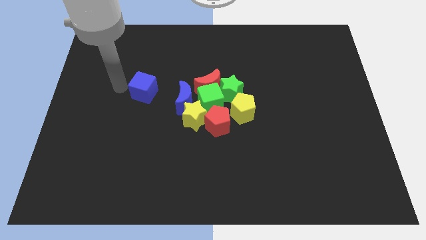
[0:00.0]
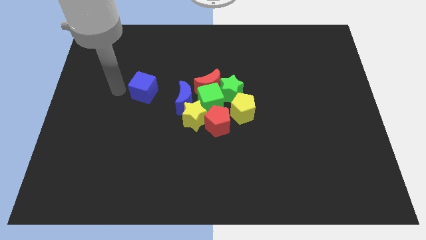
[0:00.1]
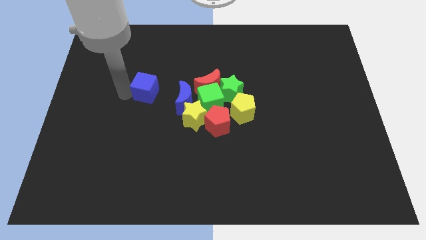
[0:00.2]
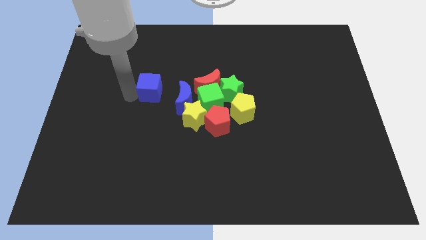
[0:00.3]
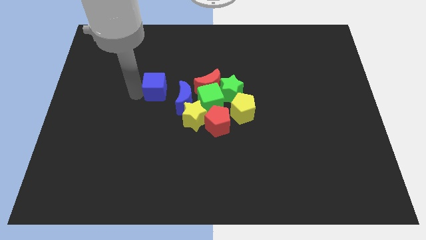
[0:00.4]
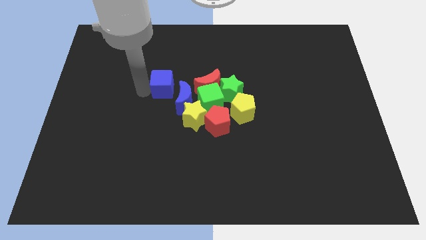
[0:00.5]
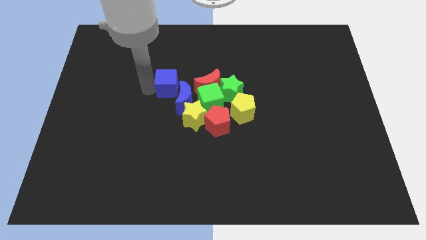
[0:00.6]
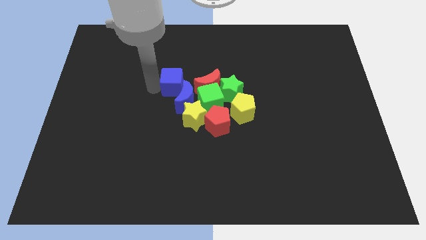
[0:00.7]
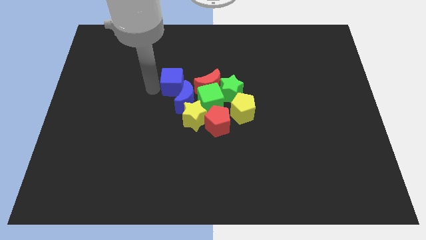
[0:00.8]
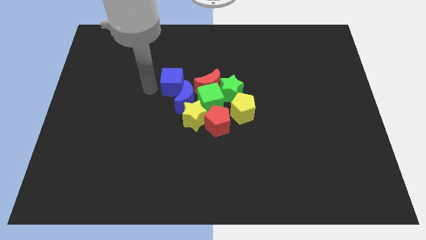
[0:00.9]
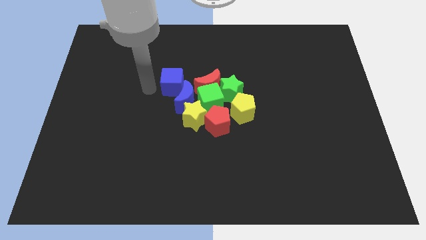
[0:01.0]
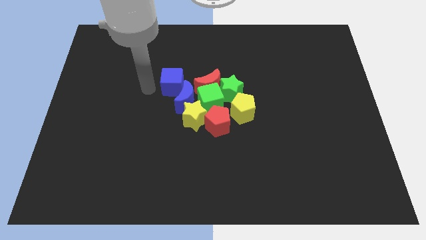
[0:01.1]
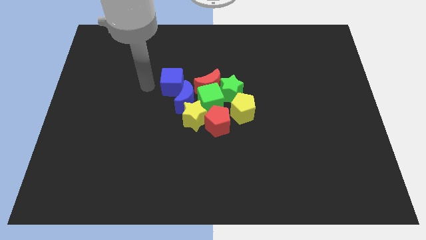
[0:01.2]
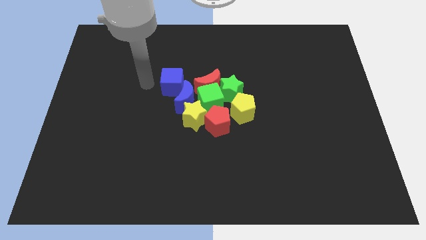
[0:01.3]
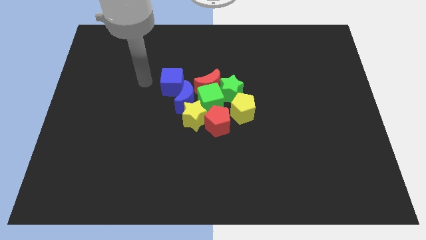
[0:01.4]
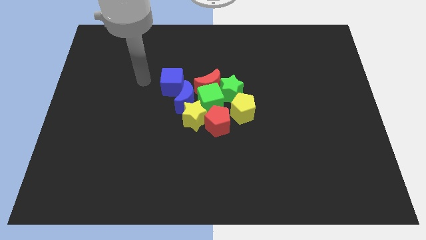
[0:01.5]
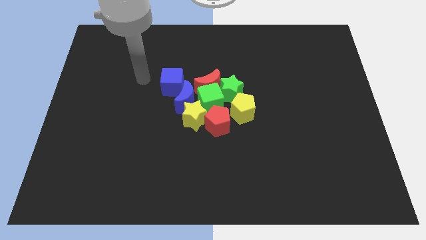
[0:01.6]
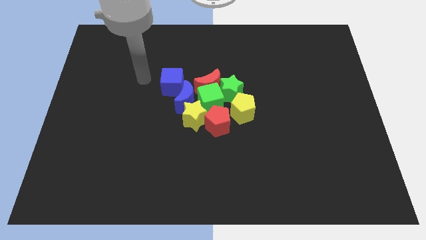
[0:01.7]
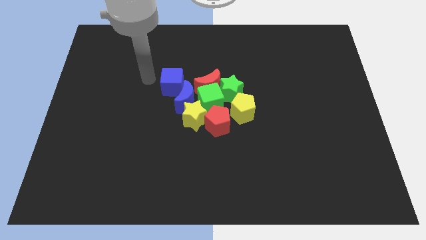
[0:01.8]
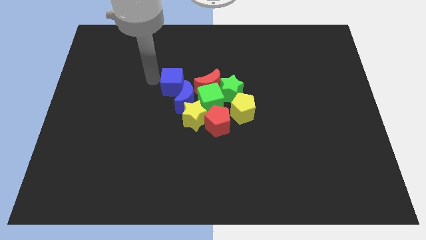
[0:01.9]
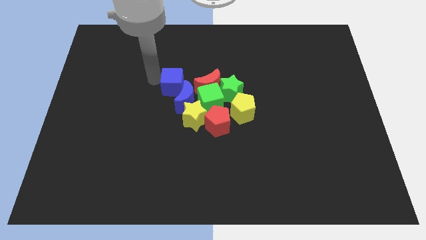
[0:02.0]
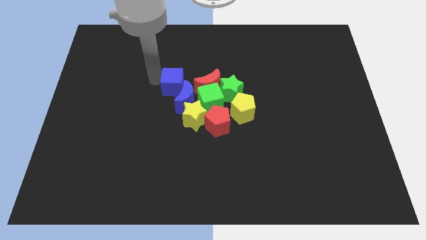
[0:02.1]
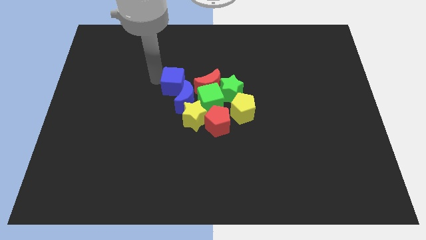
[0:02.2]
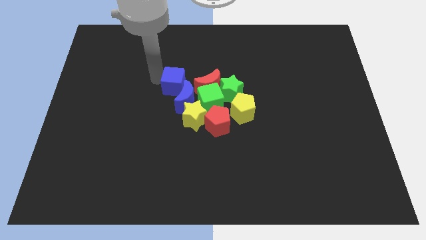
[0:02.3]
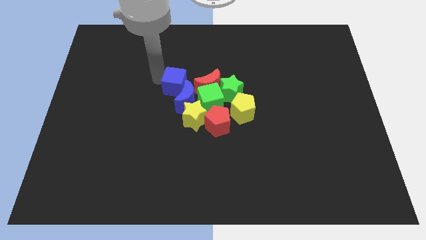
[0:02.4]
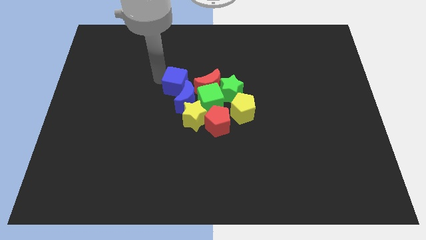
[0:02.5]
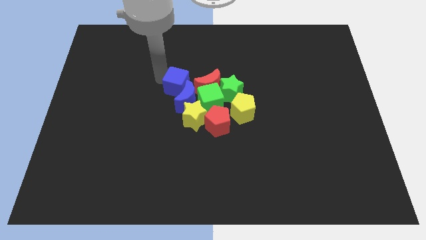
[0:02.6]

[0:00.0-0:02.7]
move the blue cube into the blue crescent

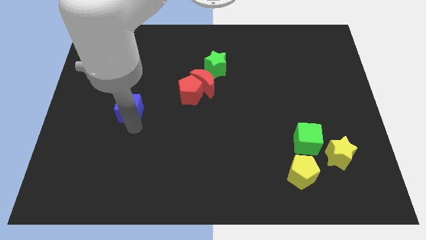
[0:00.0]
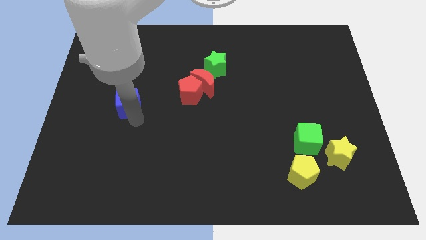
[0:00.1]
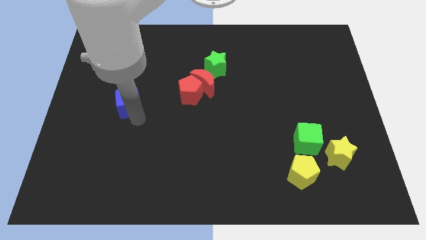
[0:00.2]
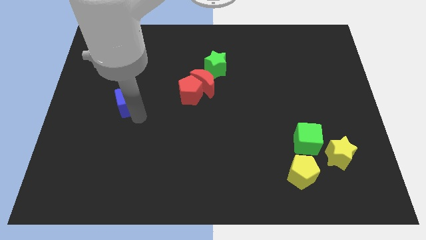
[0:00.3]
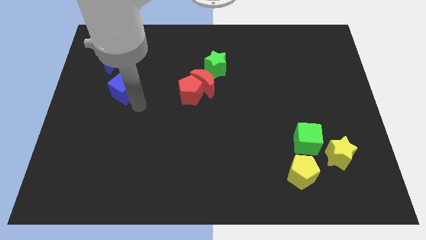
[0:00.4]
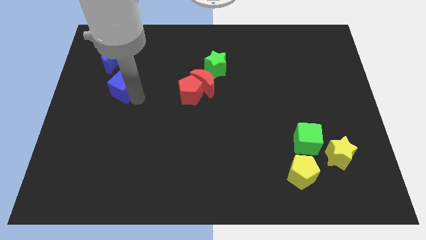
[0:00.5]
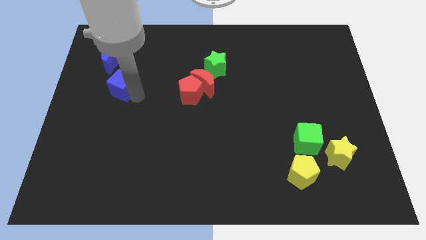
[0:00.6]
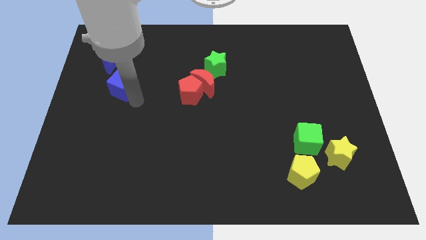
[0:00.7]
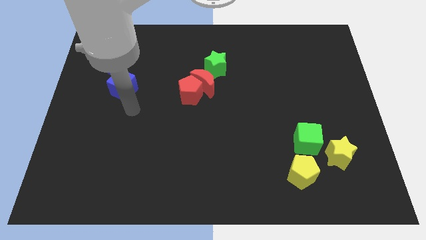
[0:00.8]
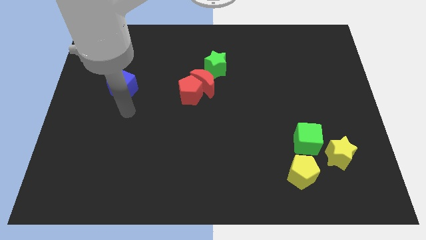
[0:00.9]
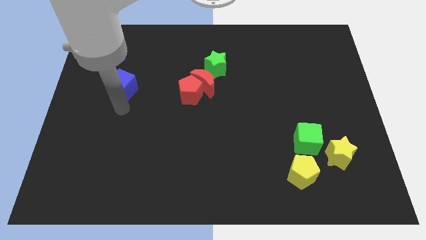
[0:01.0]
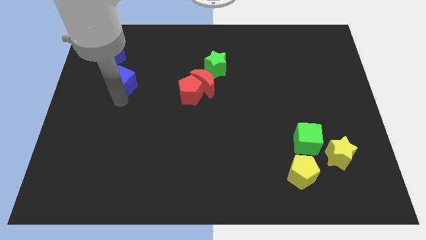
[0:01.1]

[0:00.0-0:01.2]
push the blue cube to the left of the red pentagon

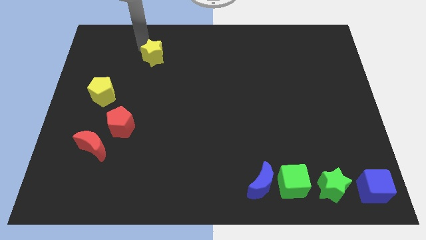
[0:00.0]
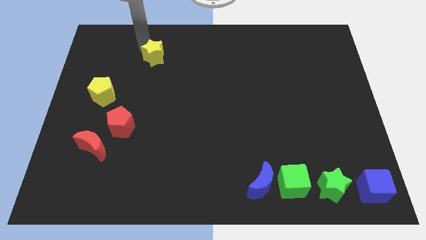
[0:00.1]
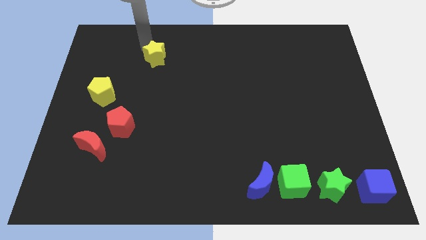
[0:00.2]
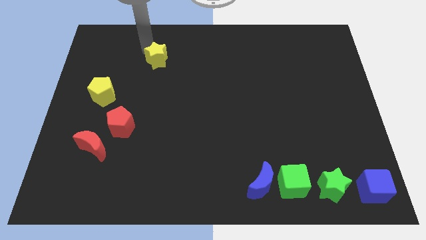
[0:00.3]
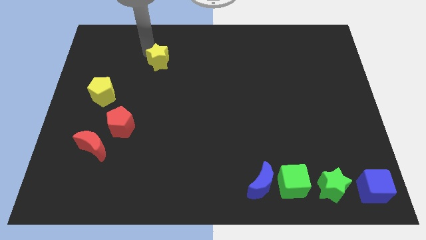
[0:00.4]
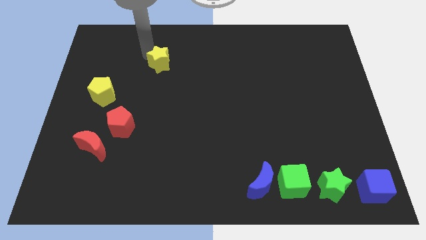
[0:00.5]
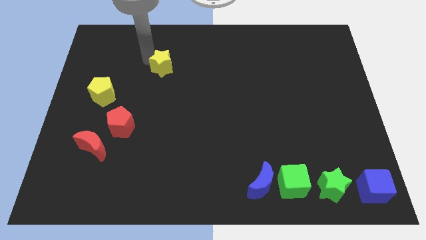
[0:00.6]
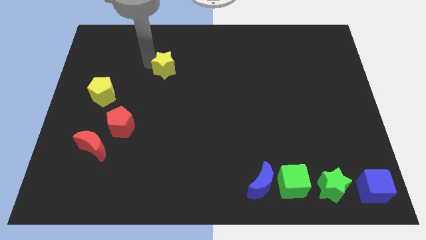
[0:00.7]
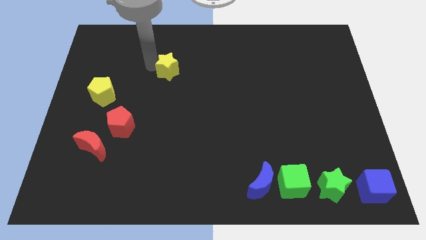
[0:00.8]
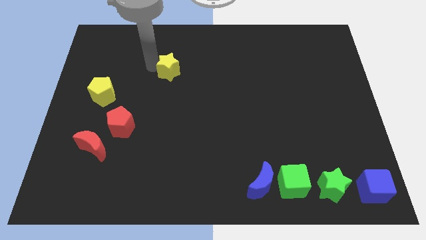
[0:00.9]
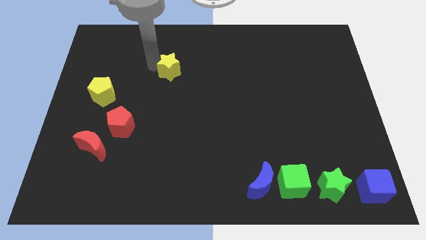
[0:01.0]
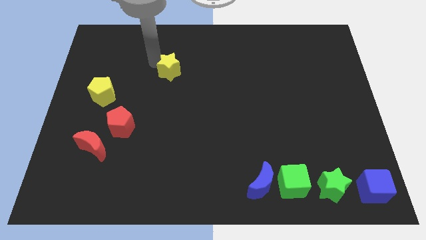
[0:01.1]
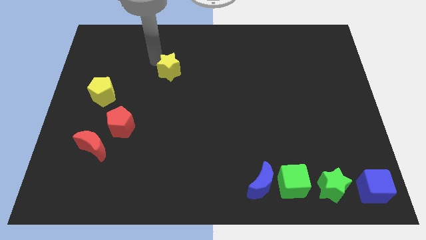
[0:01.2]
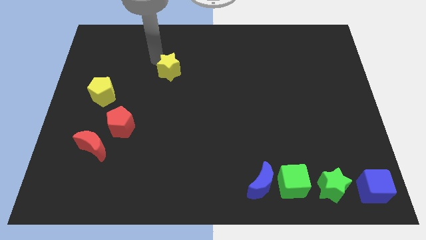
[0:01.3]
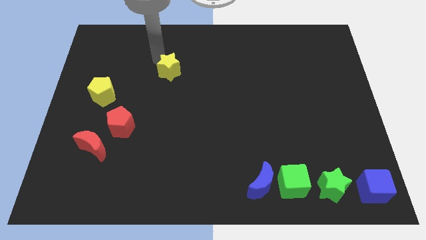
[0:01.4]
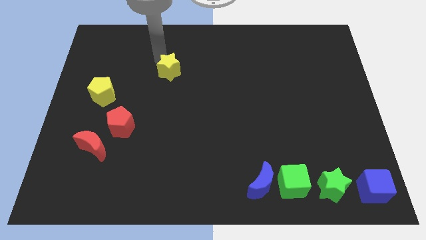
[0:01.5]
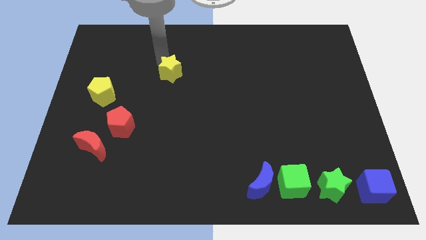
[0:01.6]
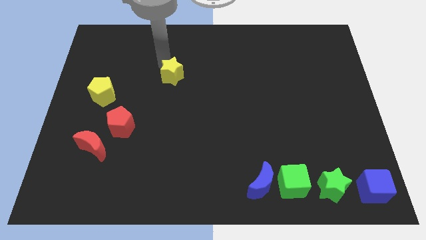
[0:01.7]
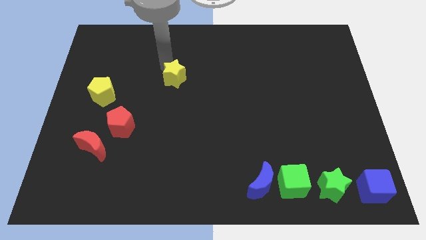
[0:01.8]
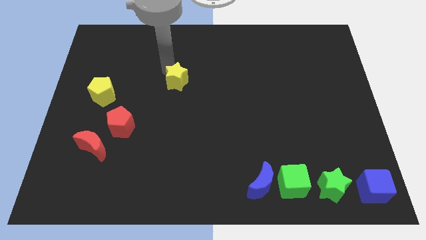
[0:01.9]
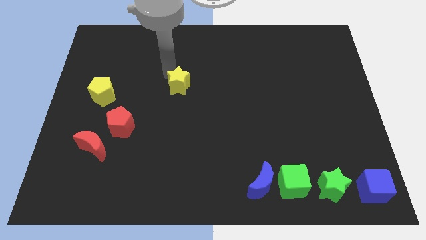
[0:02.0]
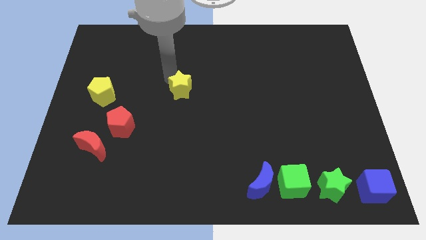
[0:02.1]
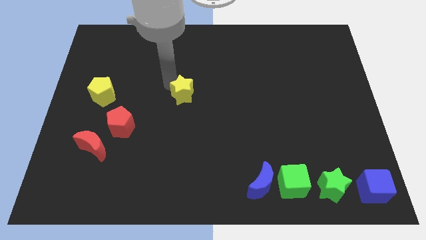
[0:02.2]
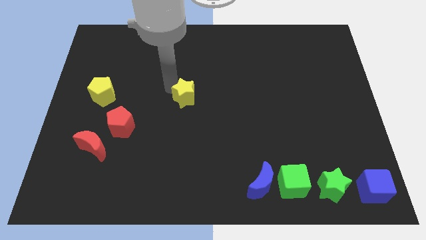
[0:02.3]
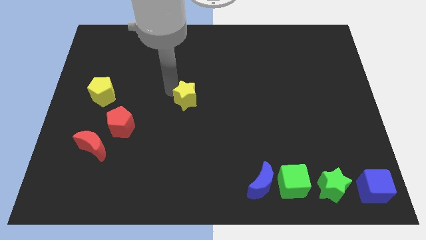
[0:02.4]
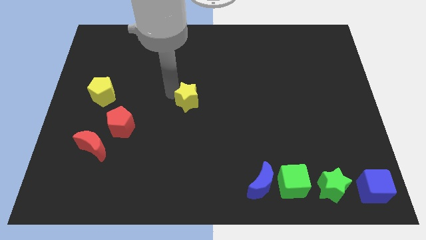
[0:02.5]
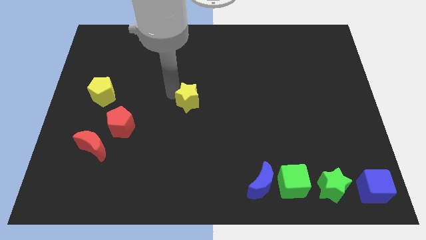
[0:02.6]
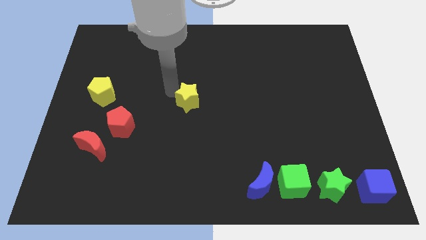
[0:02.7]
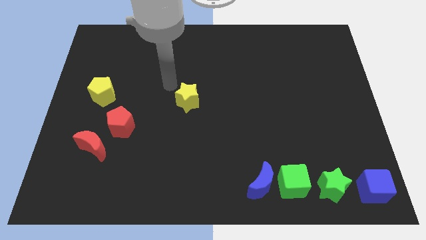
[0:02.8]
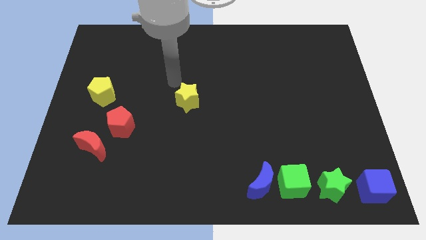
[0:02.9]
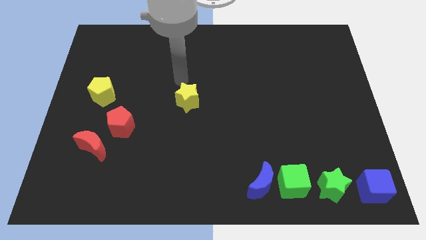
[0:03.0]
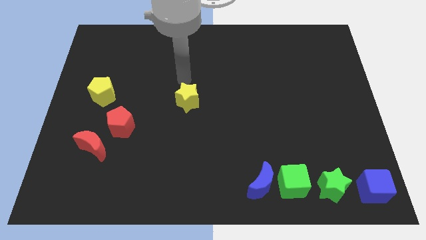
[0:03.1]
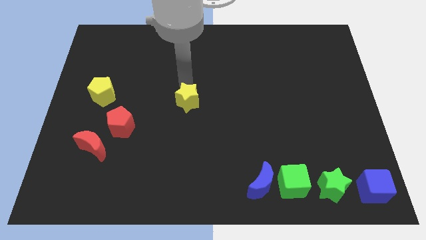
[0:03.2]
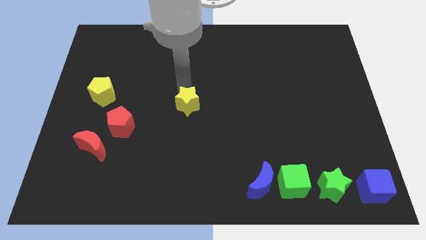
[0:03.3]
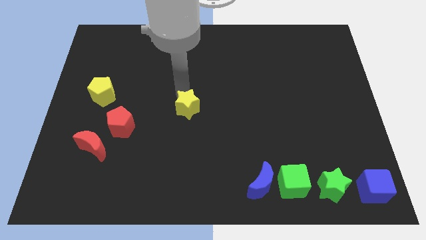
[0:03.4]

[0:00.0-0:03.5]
move yellow star to the centre of the board

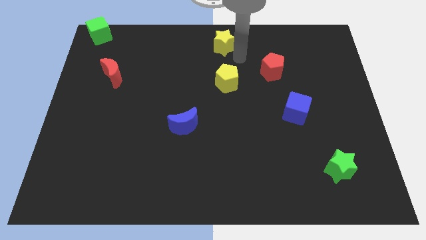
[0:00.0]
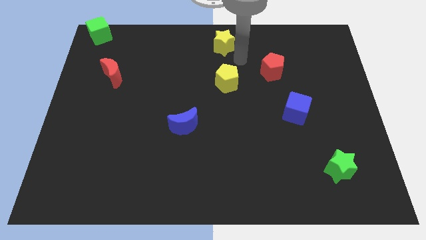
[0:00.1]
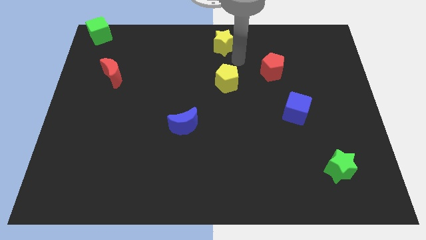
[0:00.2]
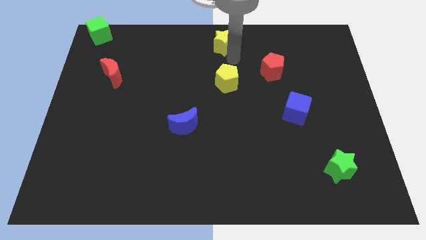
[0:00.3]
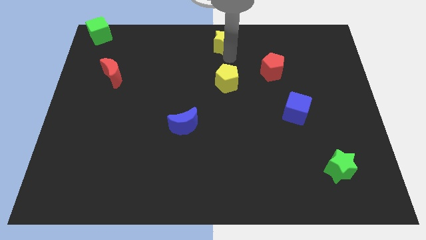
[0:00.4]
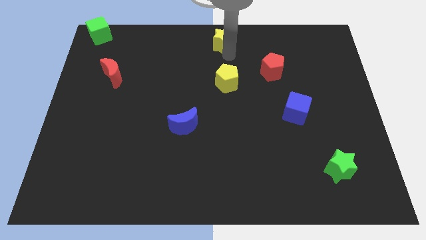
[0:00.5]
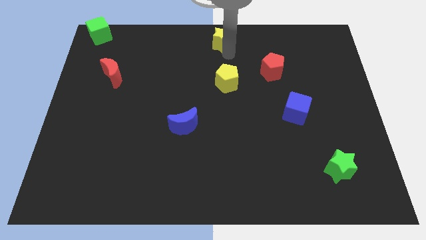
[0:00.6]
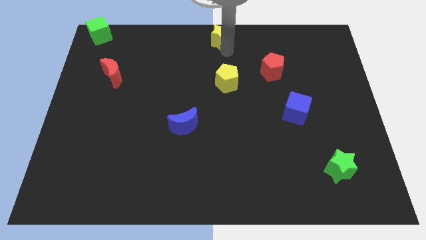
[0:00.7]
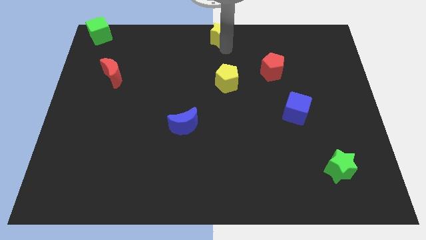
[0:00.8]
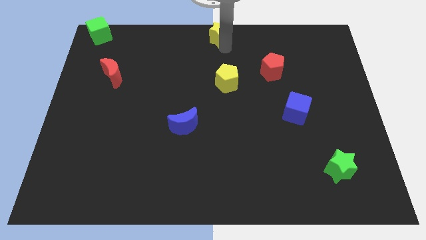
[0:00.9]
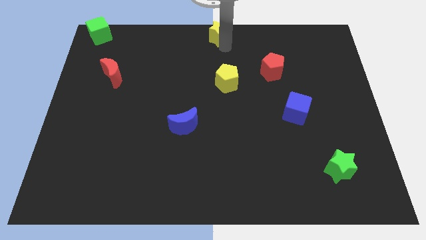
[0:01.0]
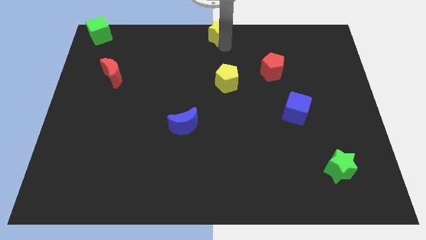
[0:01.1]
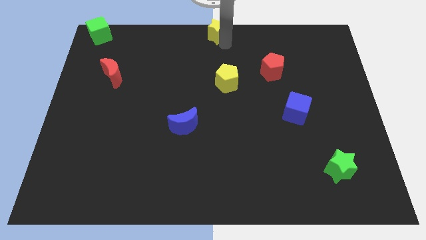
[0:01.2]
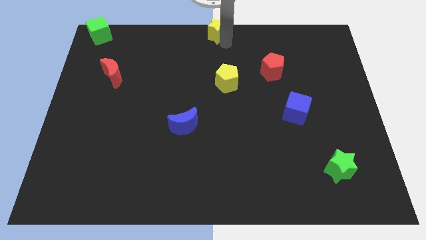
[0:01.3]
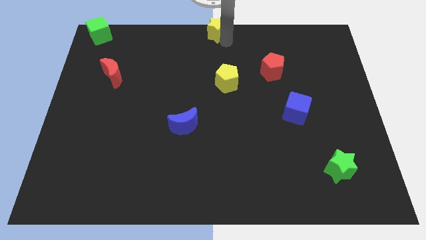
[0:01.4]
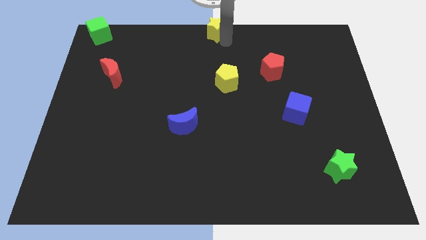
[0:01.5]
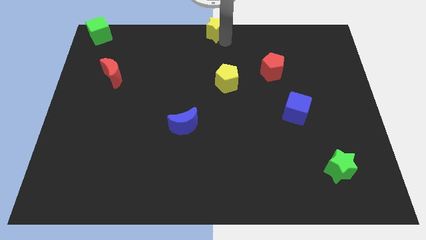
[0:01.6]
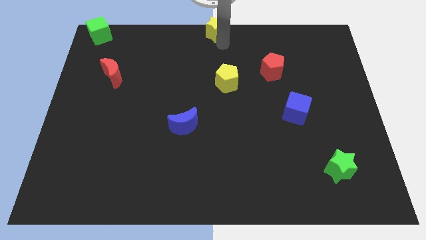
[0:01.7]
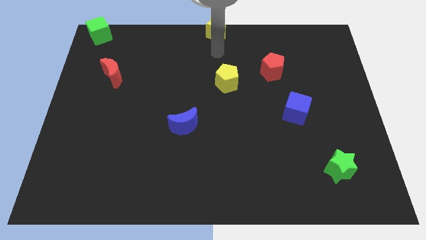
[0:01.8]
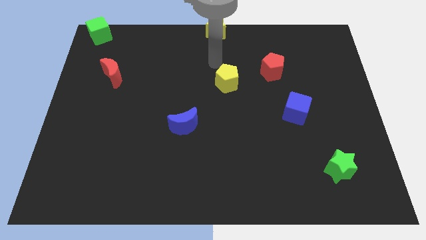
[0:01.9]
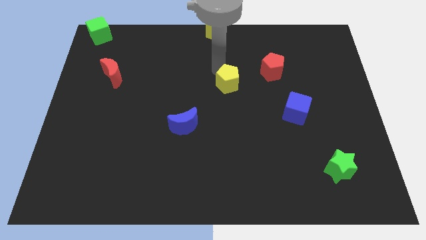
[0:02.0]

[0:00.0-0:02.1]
move the yellow star to the top centre
